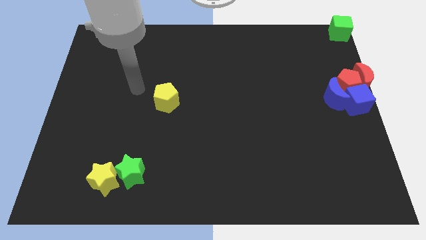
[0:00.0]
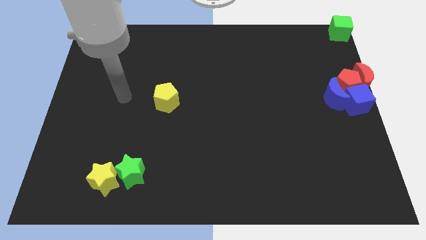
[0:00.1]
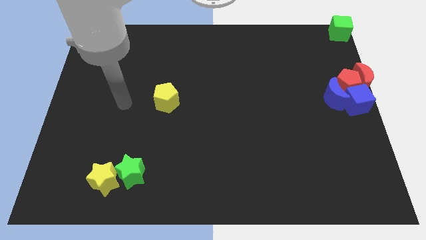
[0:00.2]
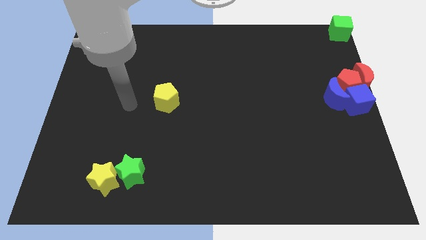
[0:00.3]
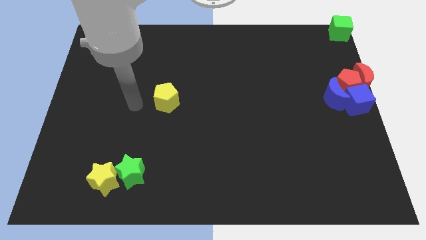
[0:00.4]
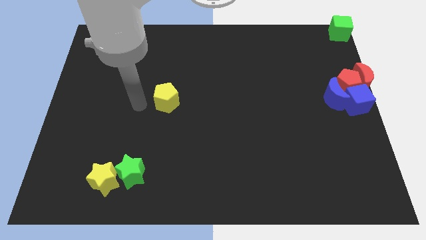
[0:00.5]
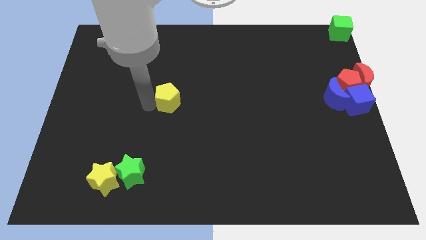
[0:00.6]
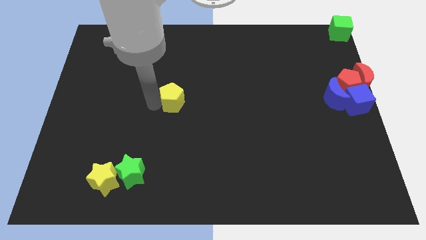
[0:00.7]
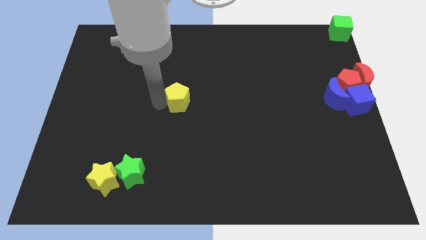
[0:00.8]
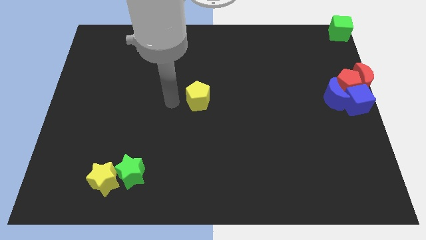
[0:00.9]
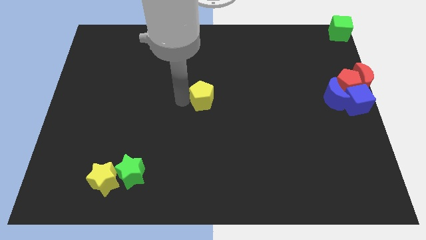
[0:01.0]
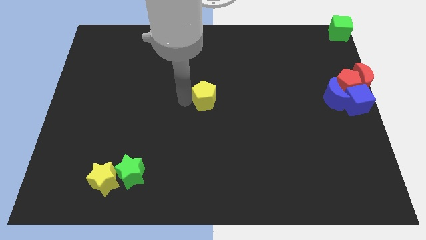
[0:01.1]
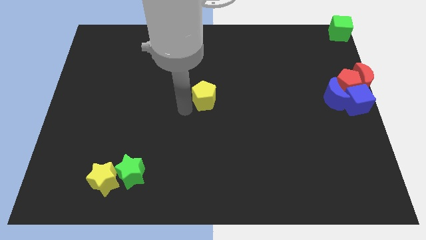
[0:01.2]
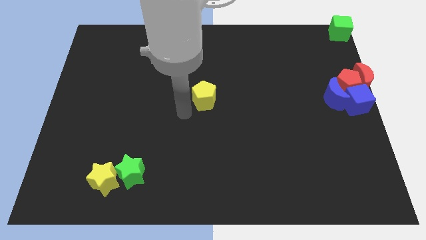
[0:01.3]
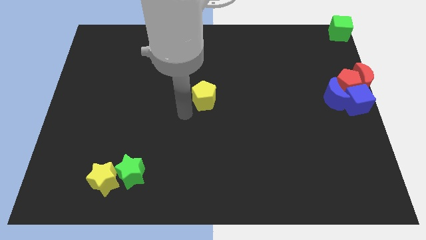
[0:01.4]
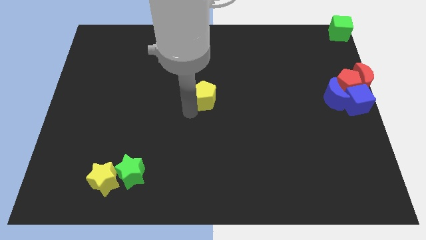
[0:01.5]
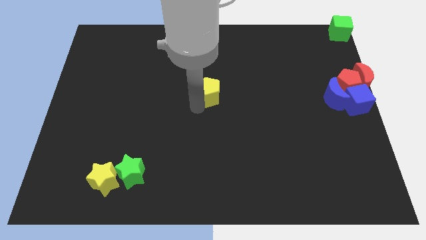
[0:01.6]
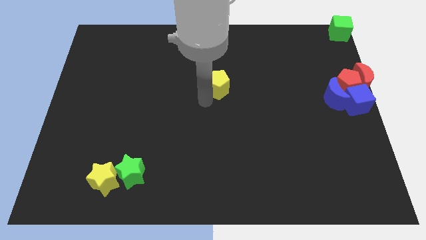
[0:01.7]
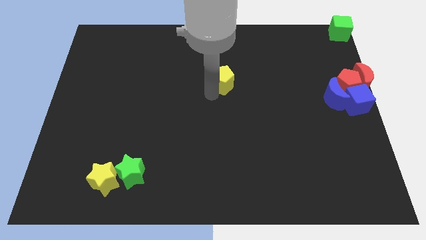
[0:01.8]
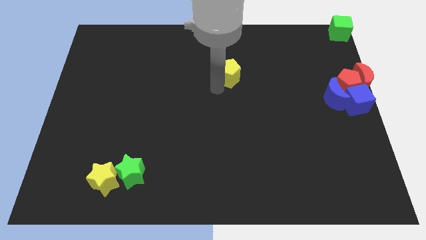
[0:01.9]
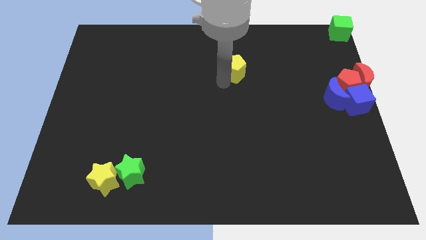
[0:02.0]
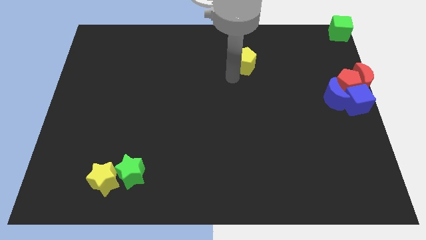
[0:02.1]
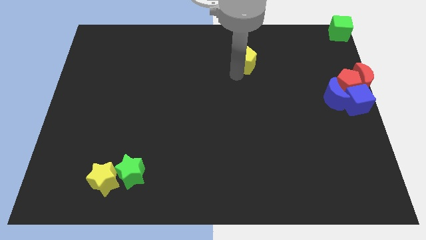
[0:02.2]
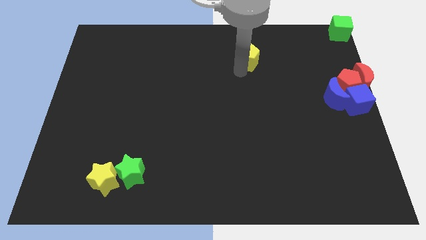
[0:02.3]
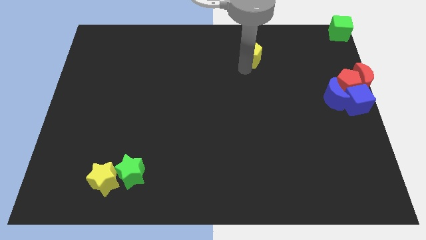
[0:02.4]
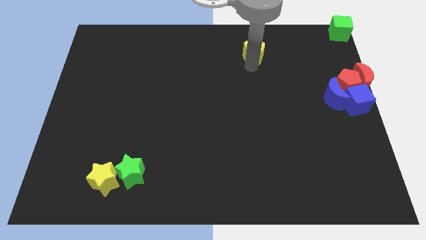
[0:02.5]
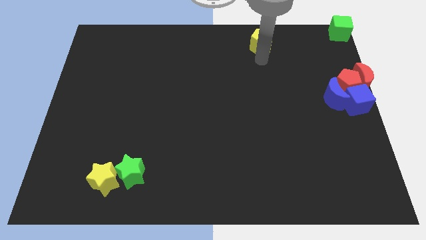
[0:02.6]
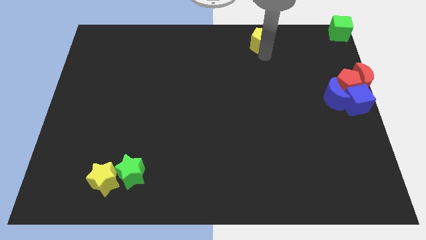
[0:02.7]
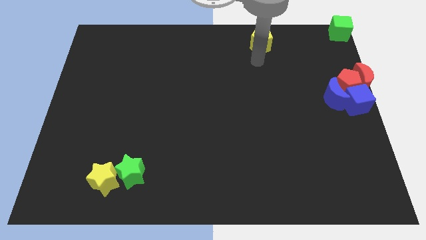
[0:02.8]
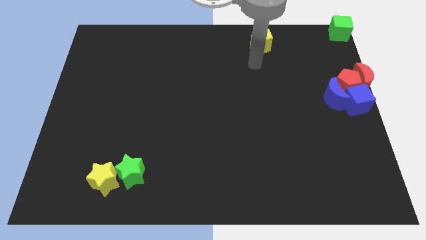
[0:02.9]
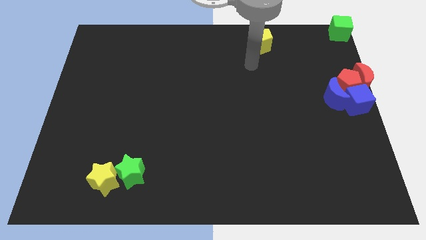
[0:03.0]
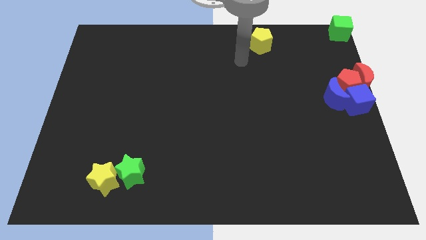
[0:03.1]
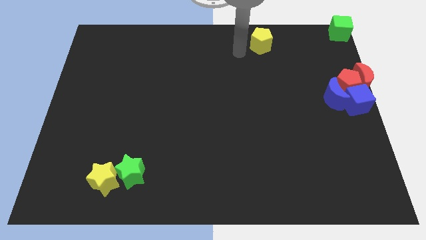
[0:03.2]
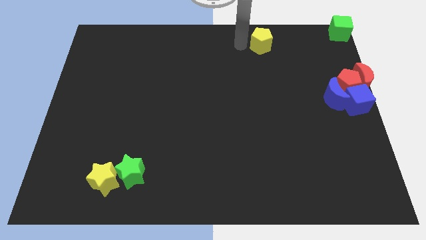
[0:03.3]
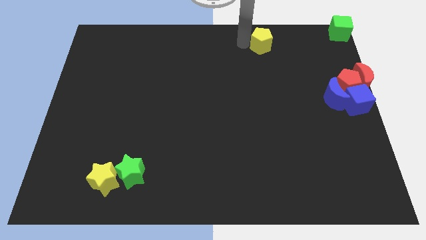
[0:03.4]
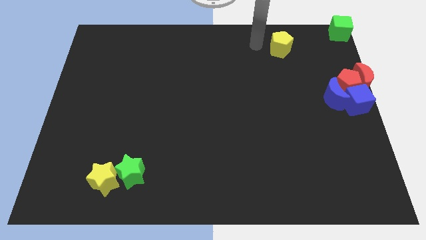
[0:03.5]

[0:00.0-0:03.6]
place the yellow pentagon to the top center

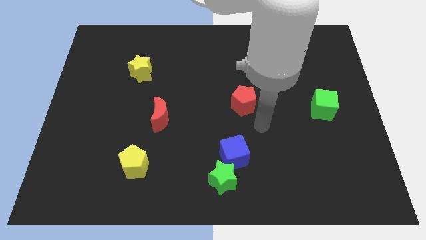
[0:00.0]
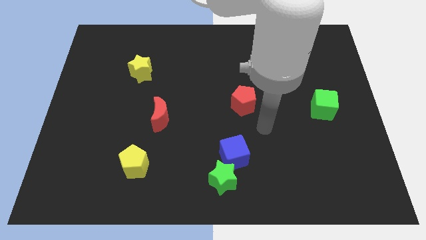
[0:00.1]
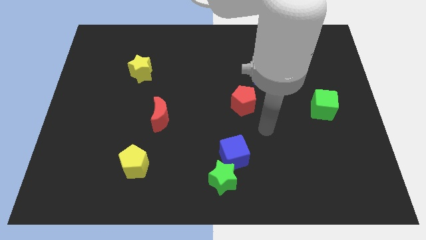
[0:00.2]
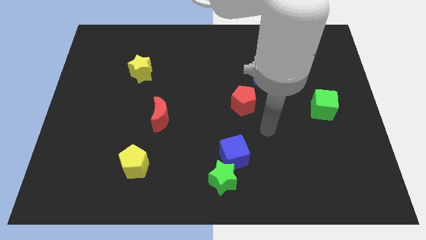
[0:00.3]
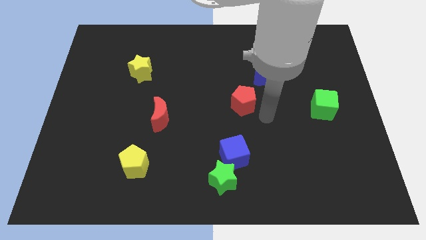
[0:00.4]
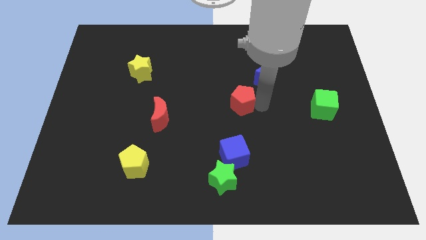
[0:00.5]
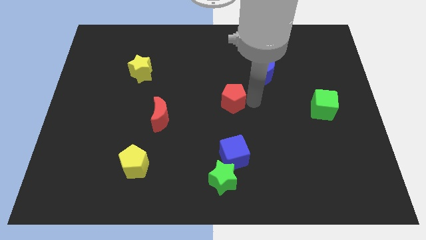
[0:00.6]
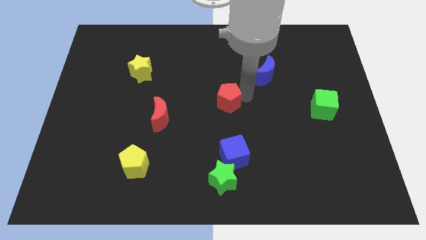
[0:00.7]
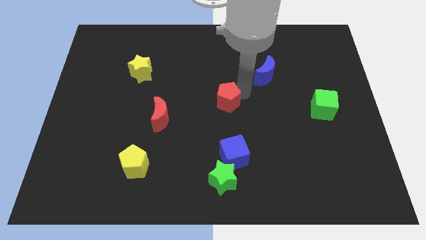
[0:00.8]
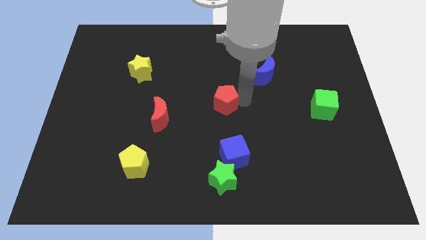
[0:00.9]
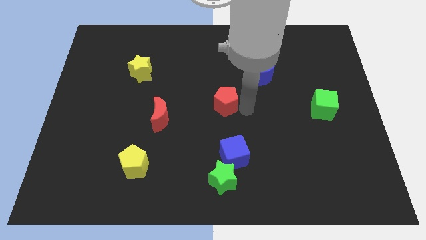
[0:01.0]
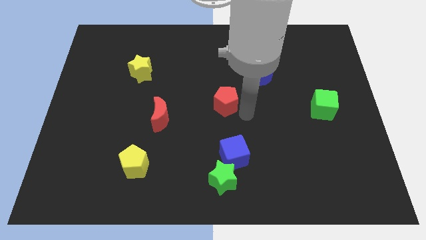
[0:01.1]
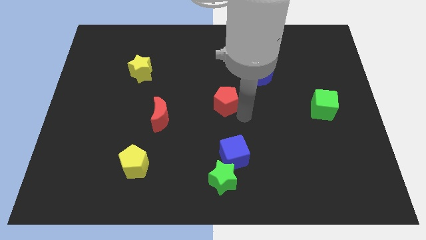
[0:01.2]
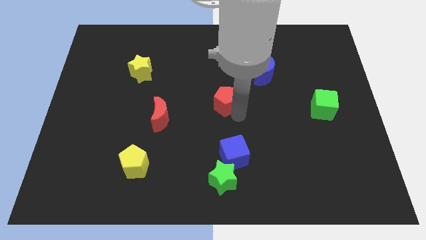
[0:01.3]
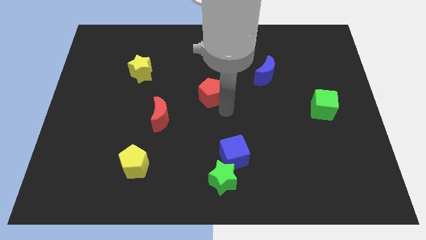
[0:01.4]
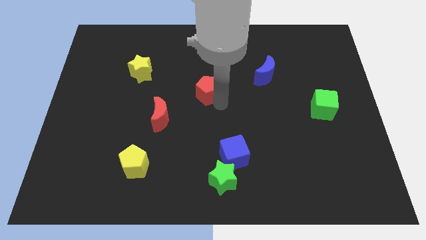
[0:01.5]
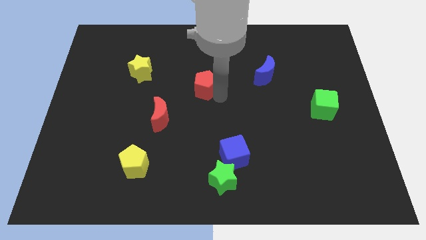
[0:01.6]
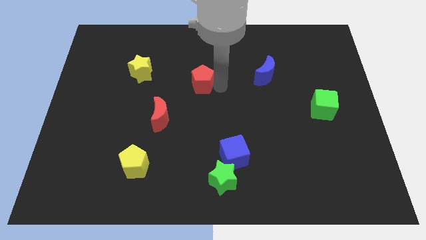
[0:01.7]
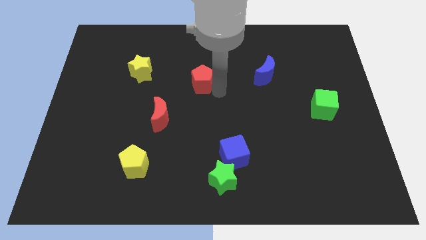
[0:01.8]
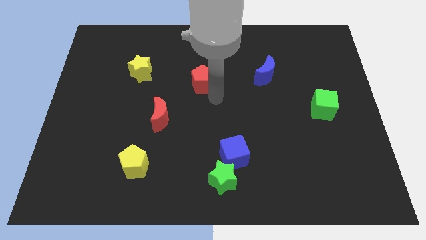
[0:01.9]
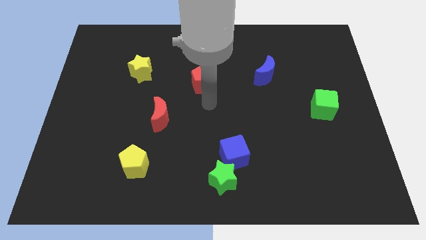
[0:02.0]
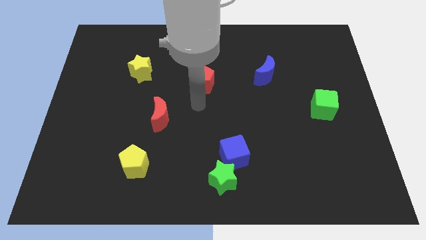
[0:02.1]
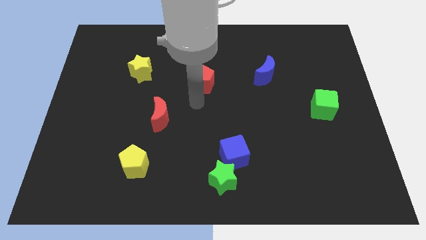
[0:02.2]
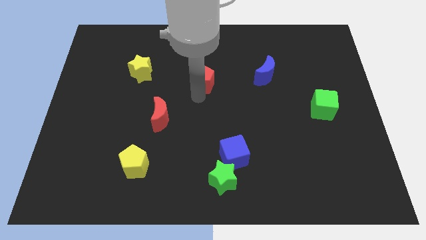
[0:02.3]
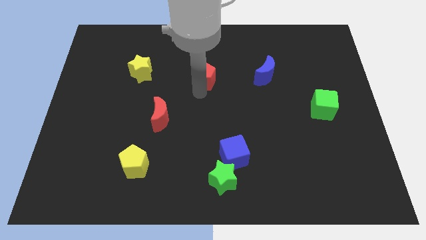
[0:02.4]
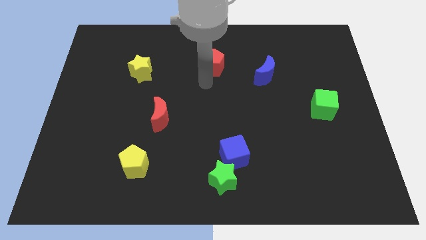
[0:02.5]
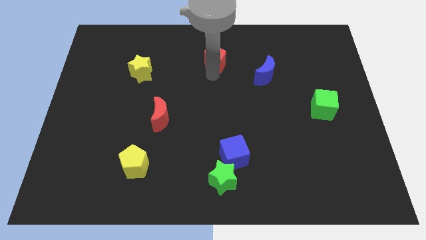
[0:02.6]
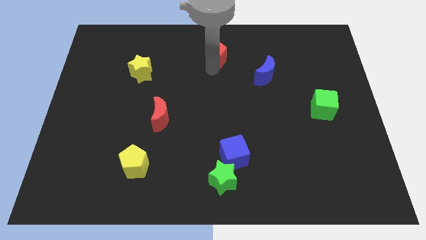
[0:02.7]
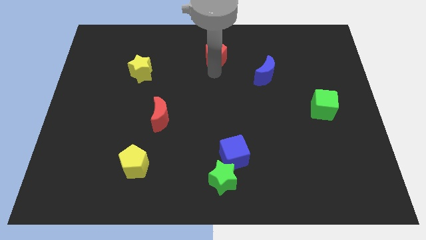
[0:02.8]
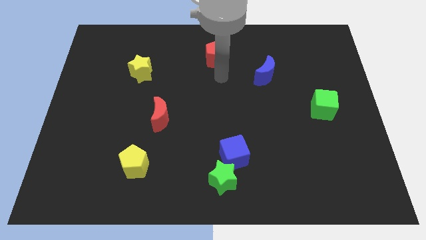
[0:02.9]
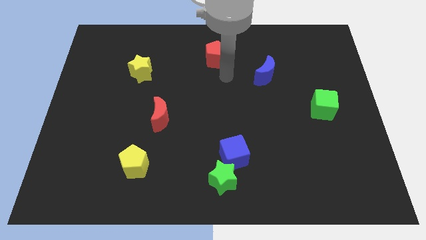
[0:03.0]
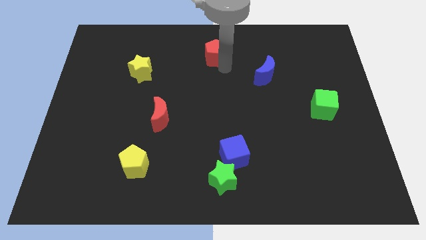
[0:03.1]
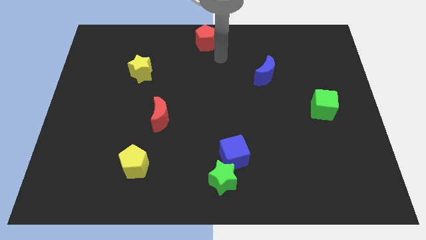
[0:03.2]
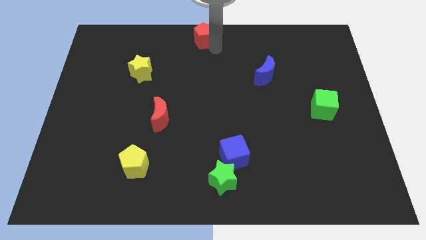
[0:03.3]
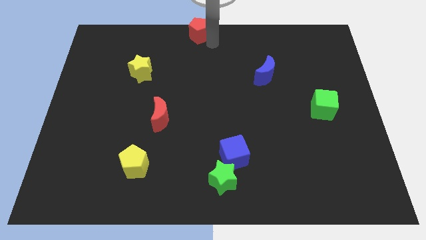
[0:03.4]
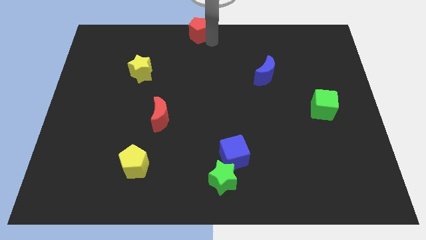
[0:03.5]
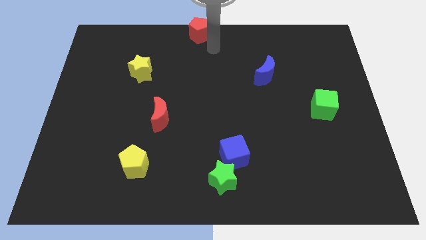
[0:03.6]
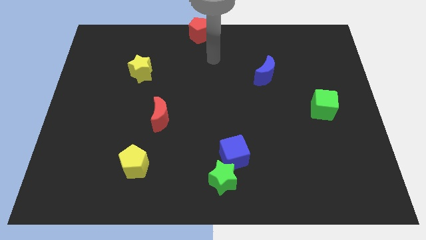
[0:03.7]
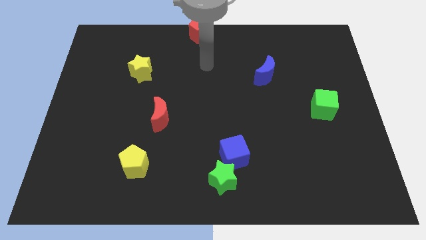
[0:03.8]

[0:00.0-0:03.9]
move red pentagon to the top middle of the board

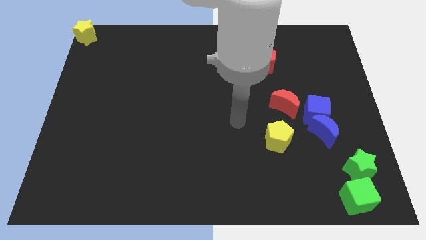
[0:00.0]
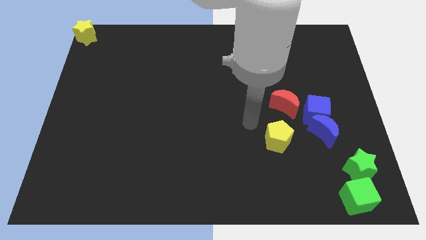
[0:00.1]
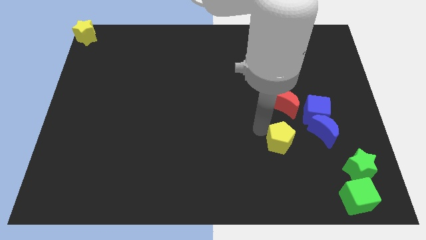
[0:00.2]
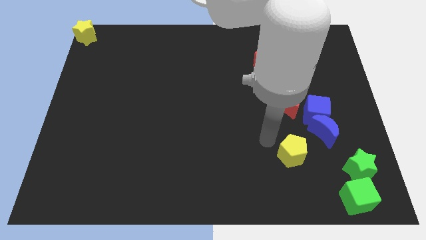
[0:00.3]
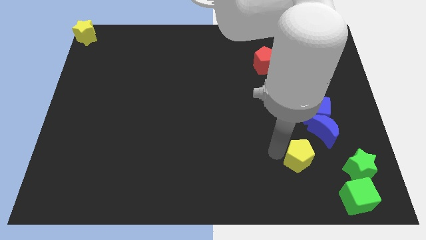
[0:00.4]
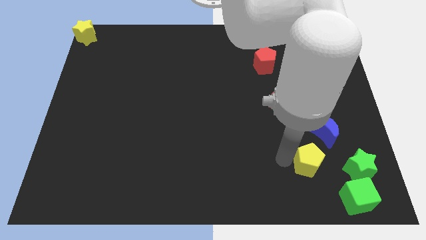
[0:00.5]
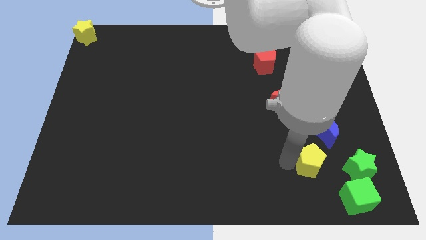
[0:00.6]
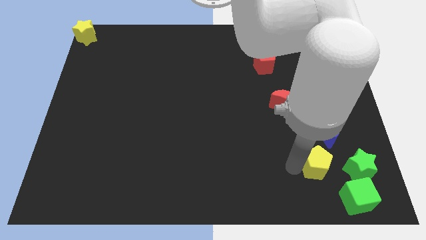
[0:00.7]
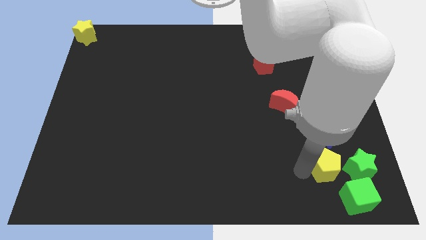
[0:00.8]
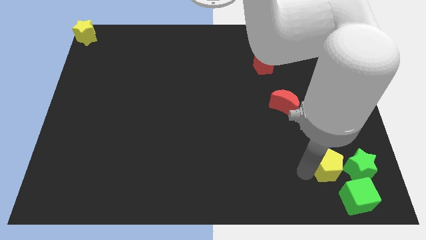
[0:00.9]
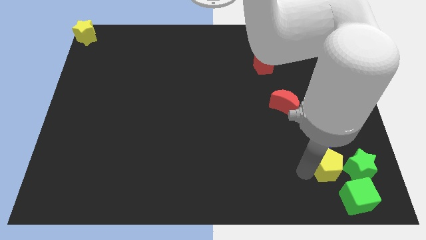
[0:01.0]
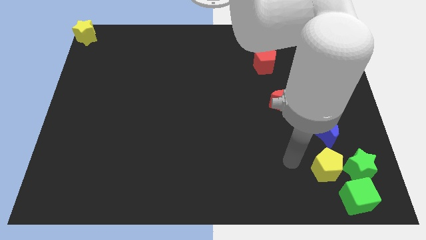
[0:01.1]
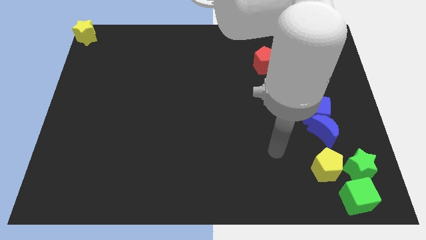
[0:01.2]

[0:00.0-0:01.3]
move the yellow pentagon to the left of the green star

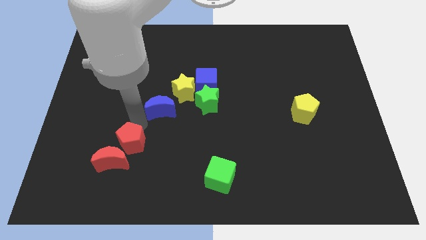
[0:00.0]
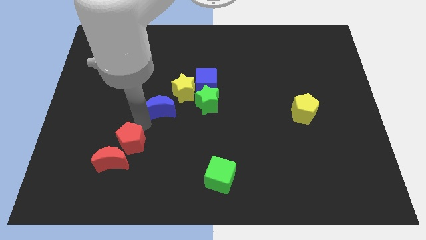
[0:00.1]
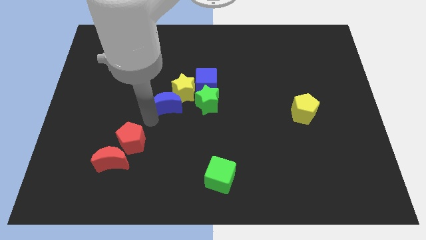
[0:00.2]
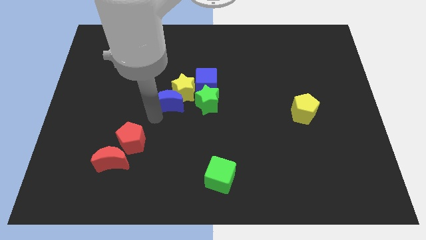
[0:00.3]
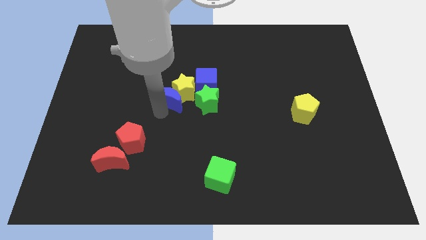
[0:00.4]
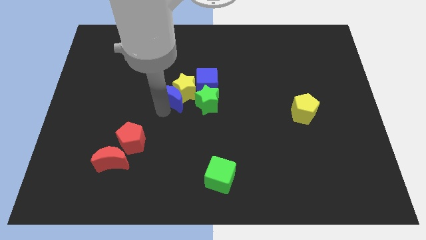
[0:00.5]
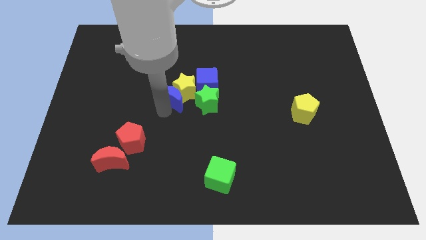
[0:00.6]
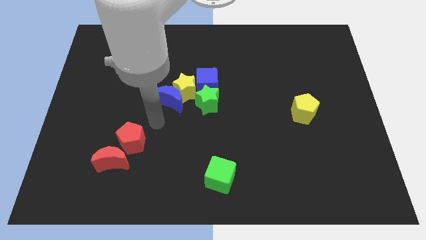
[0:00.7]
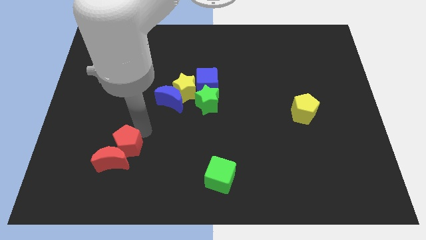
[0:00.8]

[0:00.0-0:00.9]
place blue crescent near to yellow star
